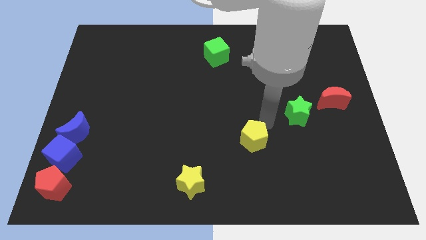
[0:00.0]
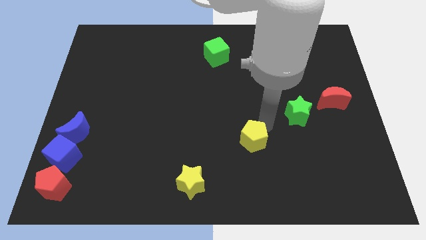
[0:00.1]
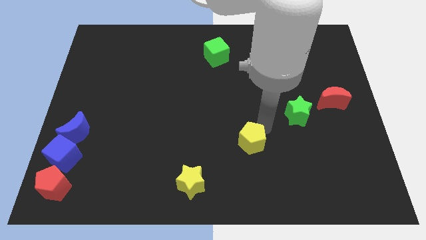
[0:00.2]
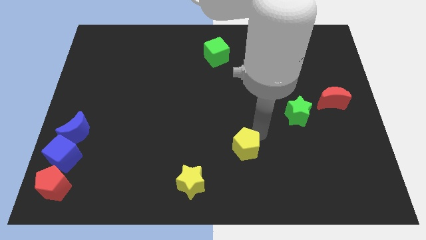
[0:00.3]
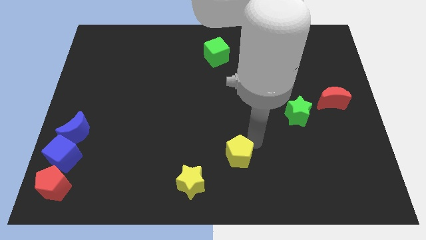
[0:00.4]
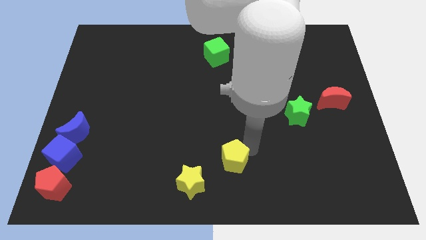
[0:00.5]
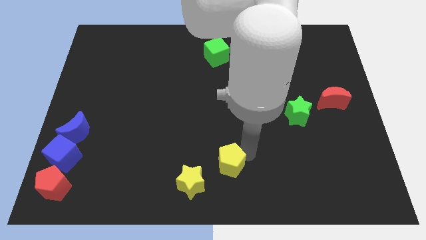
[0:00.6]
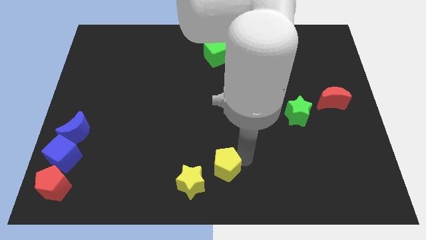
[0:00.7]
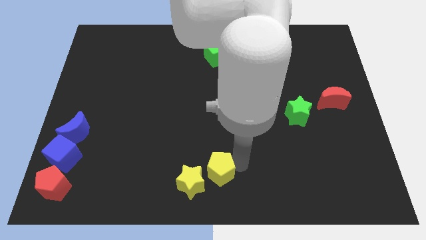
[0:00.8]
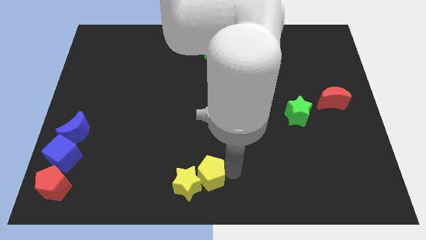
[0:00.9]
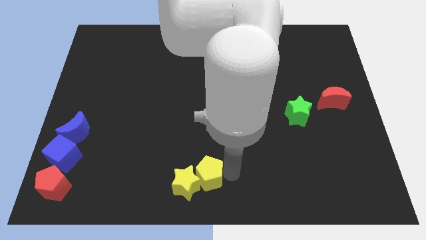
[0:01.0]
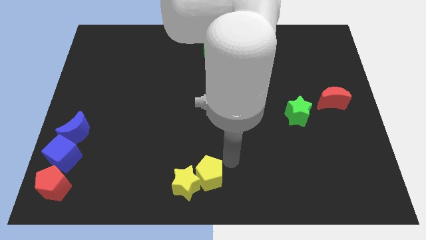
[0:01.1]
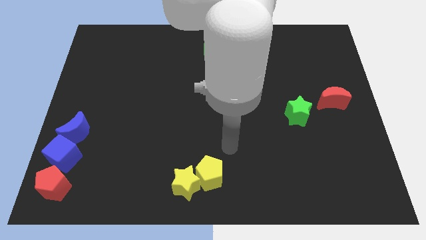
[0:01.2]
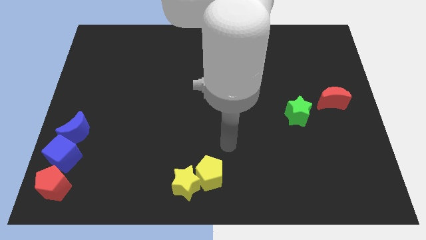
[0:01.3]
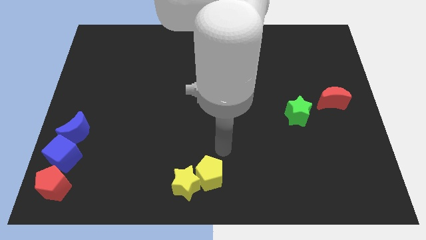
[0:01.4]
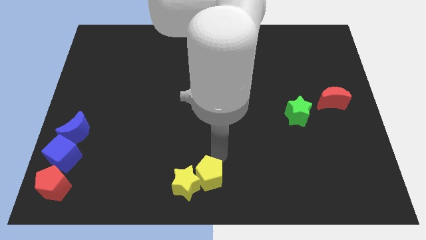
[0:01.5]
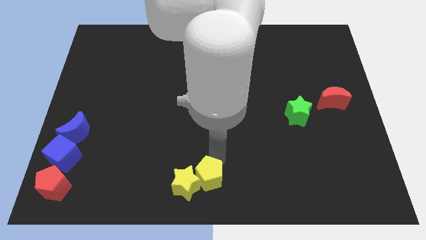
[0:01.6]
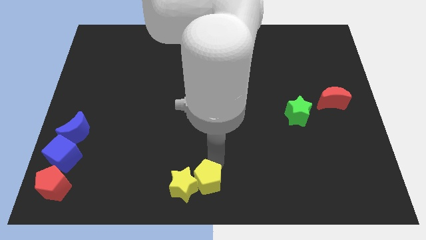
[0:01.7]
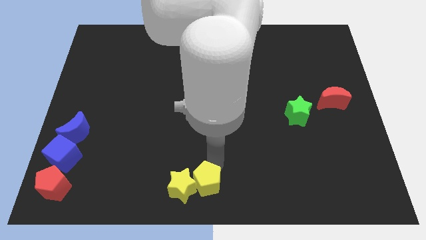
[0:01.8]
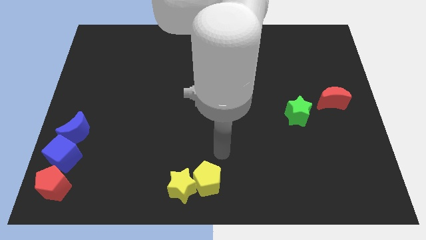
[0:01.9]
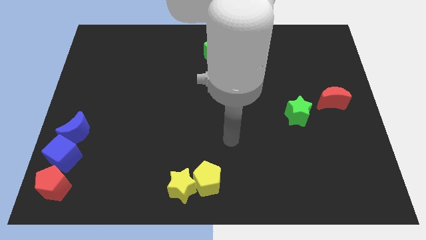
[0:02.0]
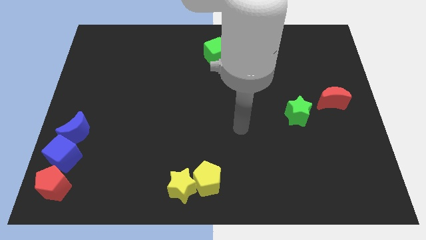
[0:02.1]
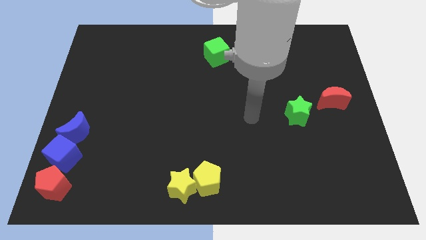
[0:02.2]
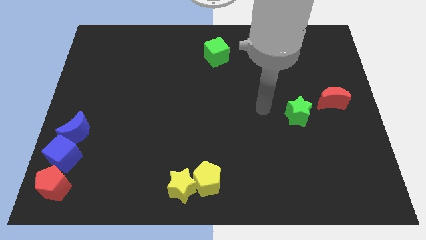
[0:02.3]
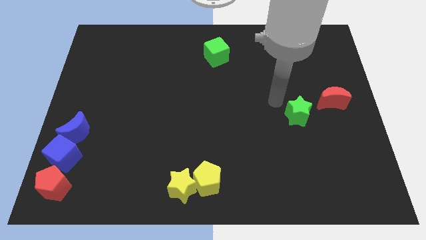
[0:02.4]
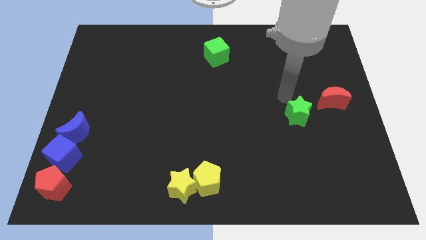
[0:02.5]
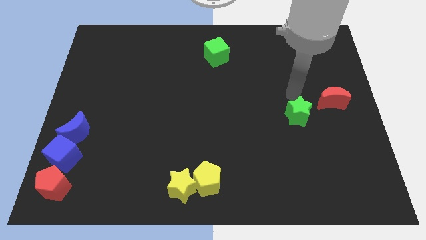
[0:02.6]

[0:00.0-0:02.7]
move the yellow blocks at the bottom center of the board

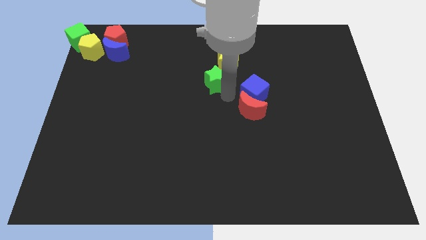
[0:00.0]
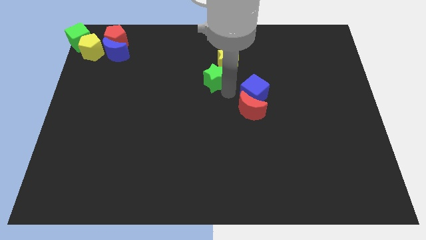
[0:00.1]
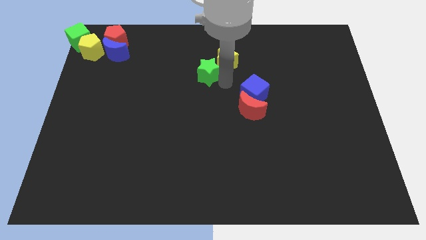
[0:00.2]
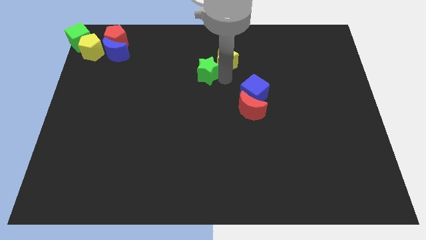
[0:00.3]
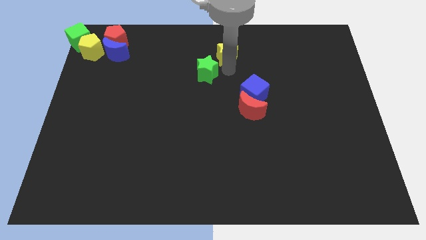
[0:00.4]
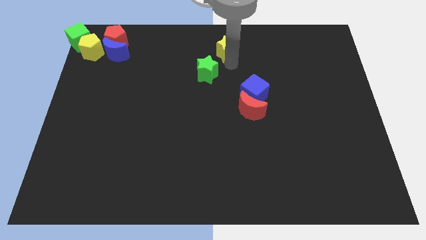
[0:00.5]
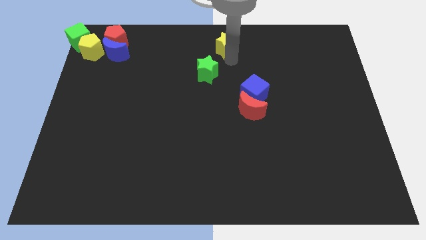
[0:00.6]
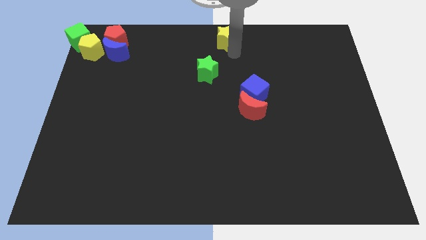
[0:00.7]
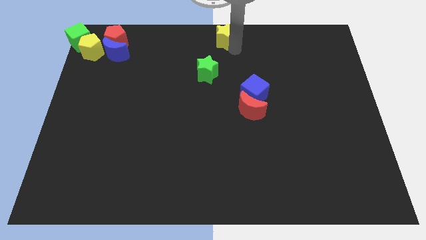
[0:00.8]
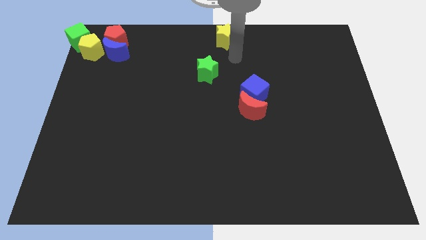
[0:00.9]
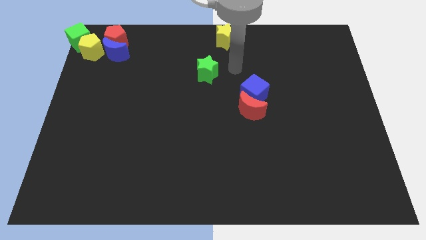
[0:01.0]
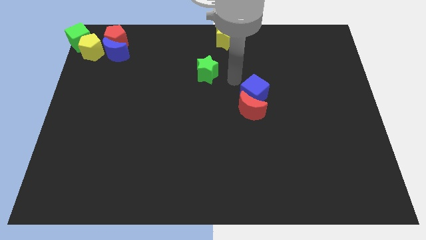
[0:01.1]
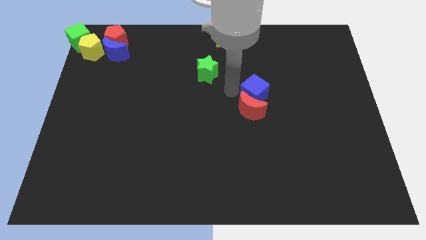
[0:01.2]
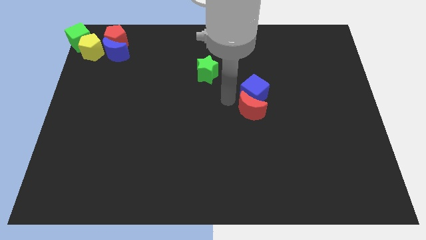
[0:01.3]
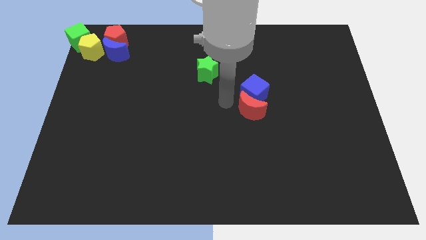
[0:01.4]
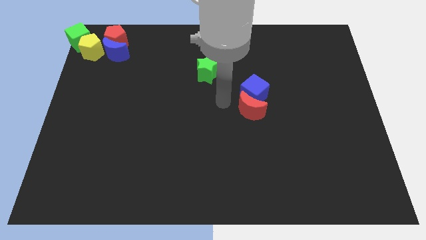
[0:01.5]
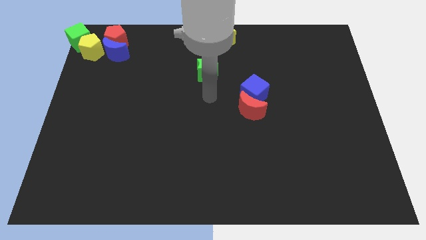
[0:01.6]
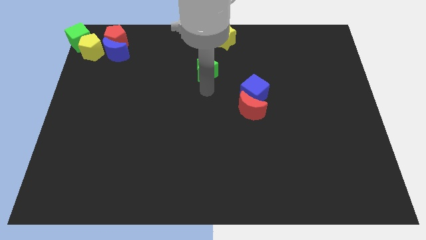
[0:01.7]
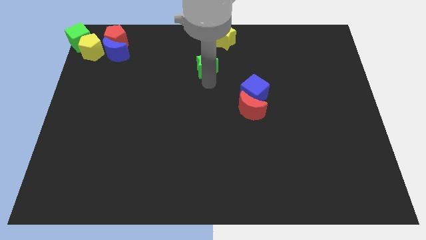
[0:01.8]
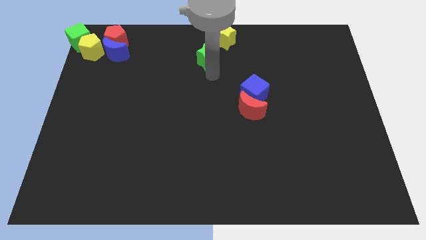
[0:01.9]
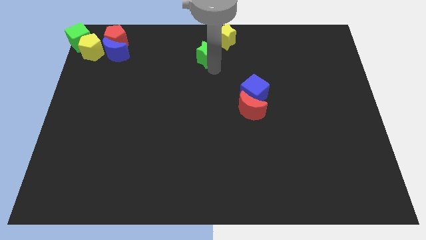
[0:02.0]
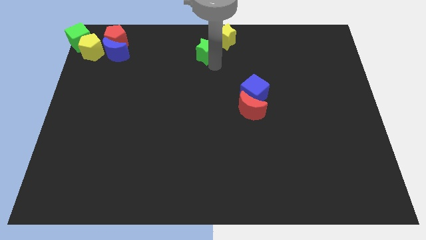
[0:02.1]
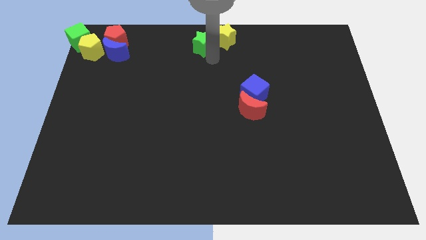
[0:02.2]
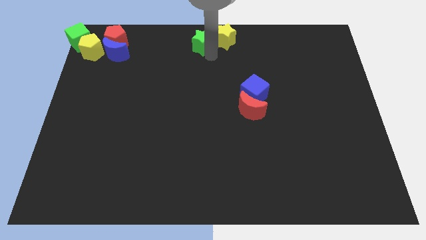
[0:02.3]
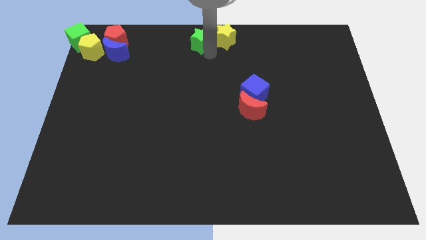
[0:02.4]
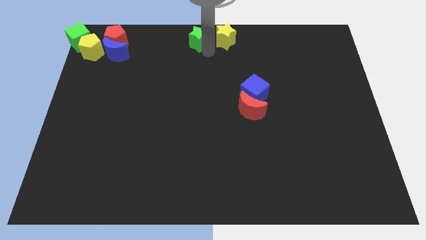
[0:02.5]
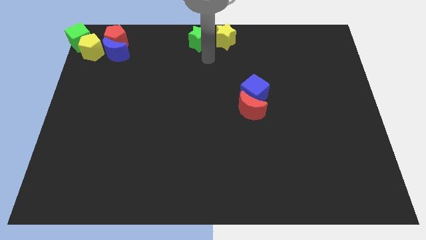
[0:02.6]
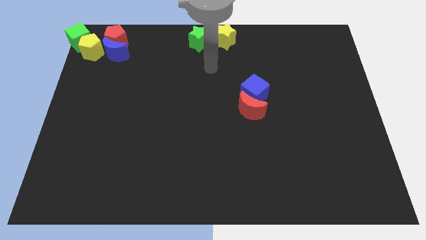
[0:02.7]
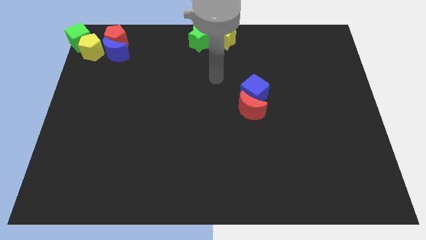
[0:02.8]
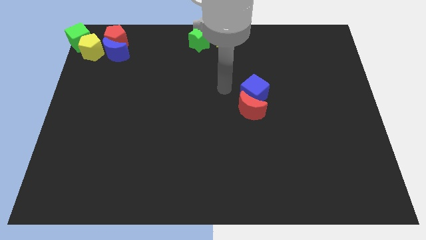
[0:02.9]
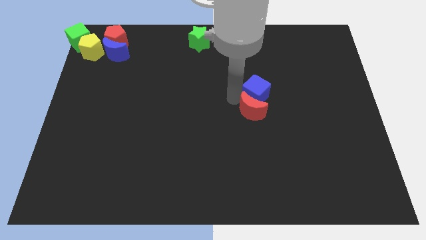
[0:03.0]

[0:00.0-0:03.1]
move both stars to the top center

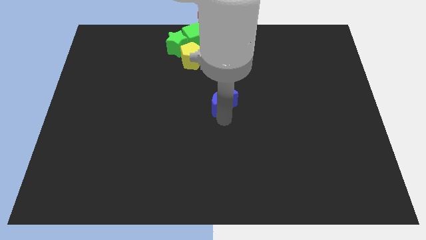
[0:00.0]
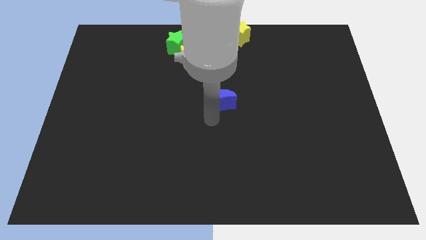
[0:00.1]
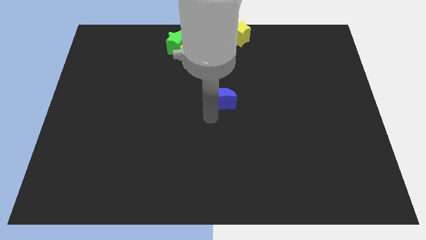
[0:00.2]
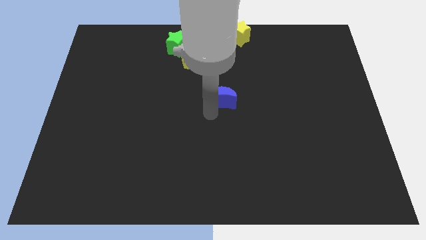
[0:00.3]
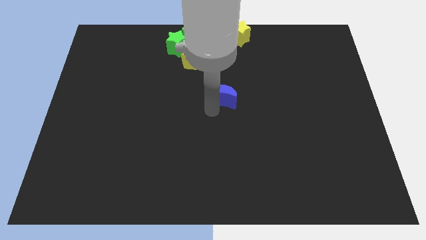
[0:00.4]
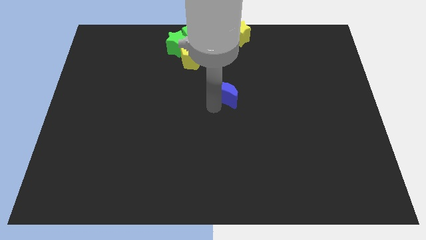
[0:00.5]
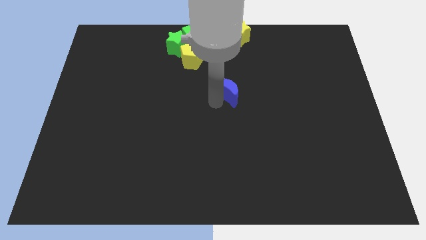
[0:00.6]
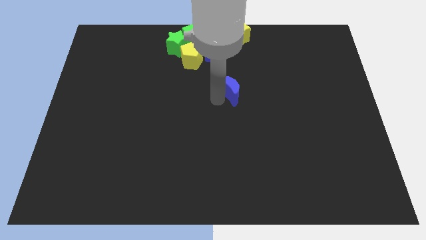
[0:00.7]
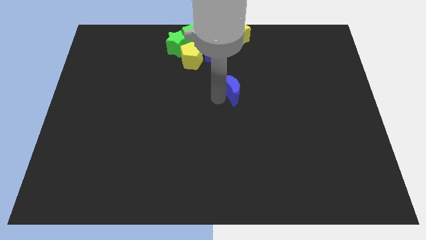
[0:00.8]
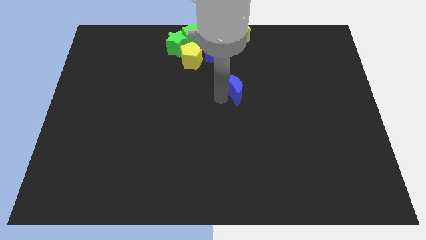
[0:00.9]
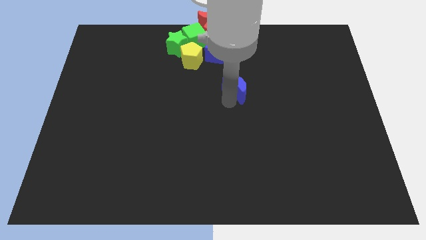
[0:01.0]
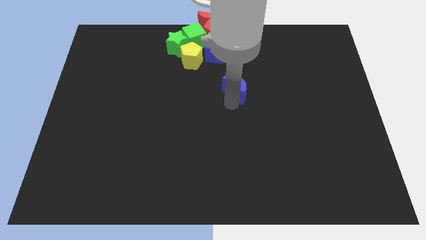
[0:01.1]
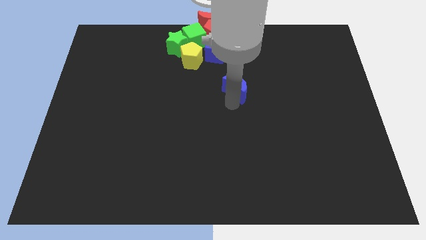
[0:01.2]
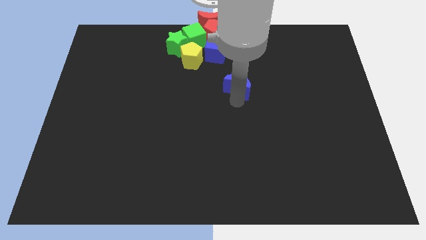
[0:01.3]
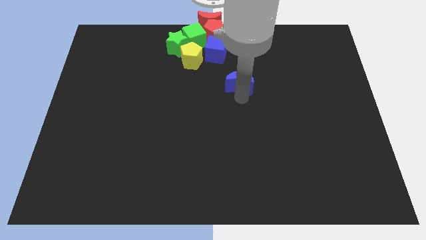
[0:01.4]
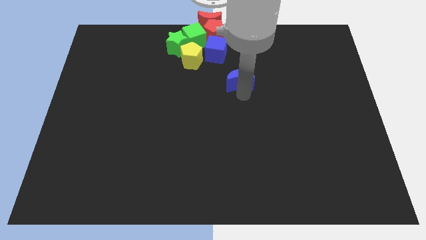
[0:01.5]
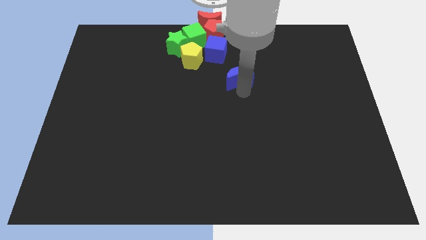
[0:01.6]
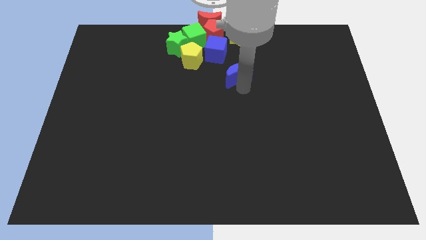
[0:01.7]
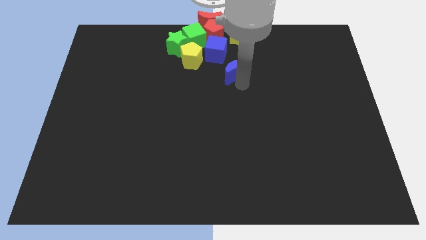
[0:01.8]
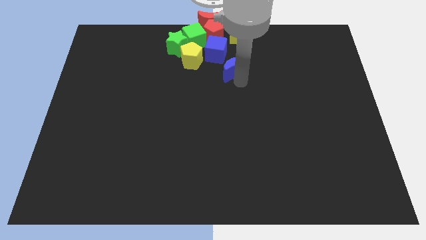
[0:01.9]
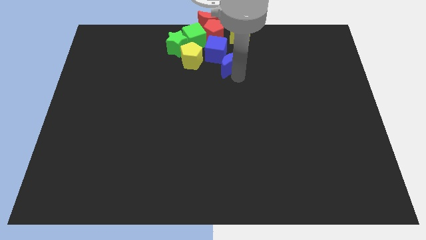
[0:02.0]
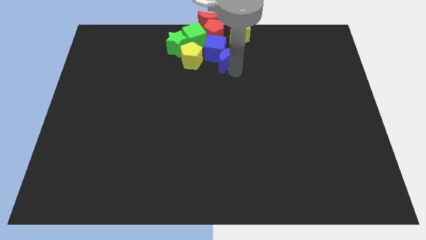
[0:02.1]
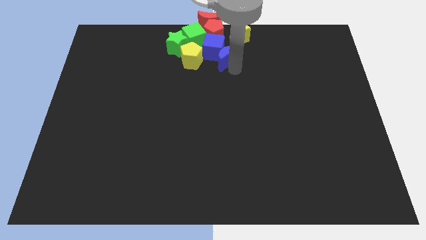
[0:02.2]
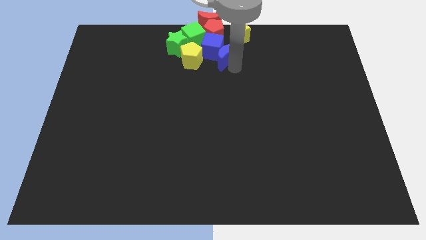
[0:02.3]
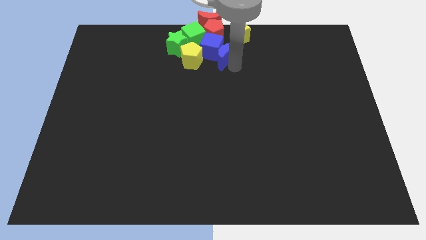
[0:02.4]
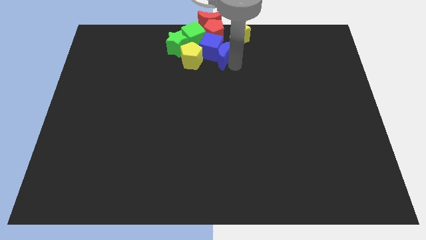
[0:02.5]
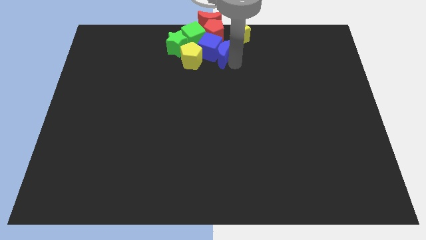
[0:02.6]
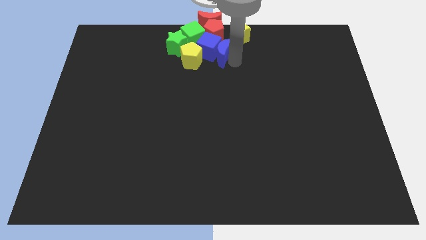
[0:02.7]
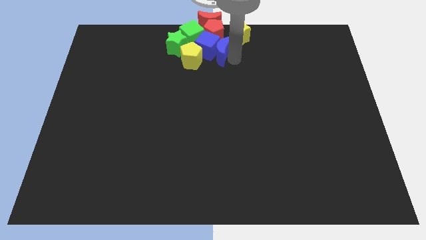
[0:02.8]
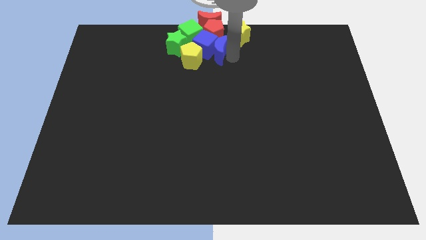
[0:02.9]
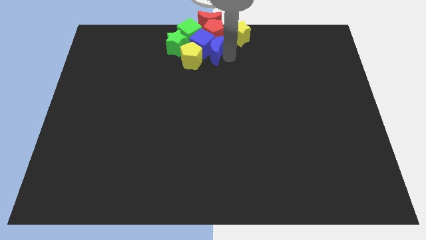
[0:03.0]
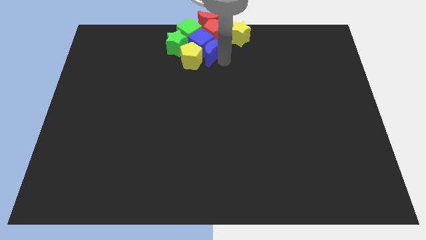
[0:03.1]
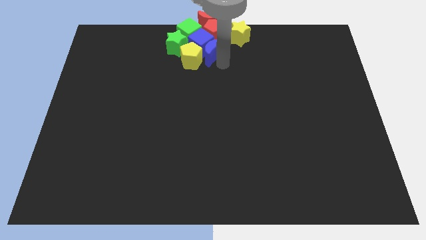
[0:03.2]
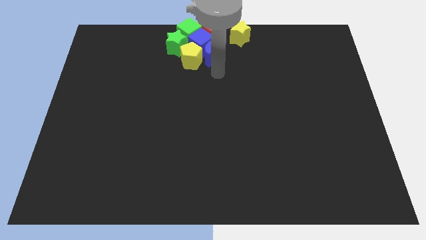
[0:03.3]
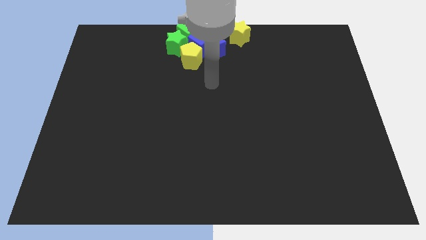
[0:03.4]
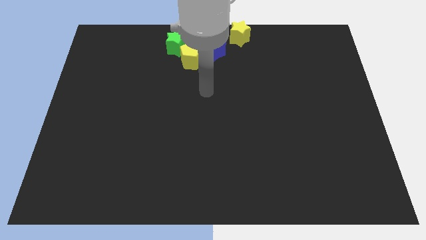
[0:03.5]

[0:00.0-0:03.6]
move the blue moon into the group of blocks
